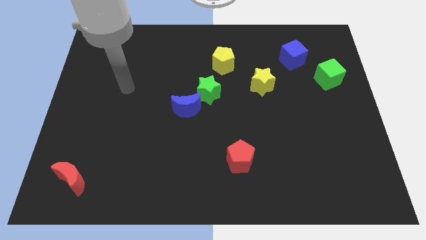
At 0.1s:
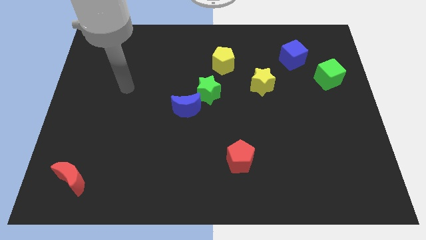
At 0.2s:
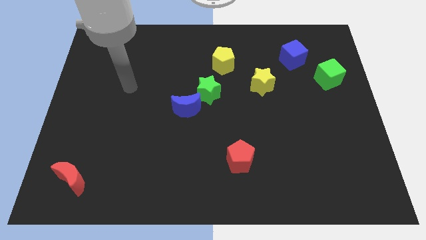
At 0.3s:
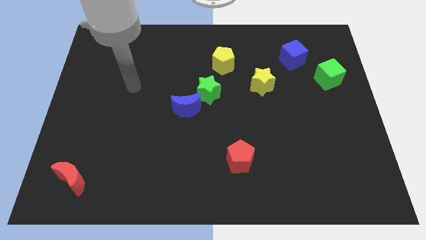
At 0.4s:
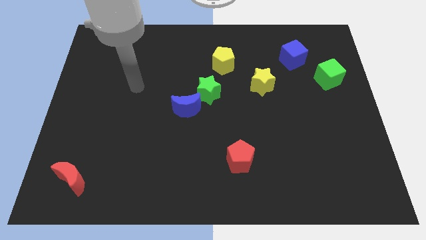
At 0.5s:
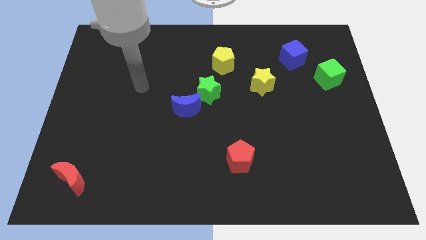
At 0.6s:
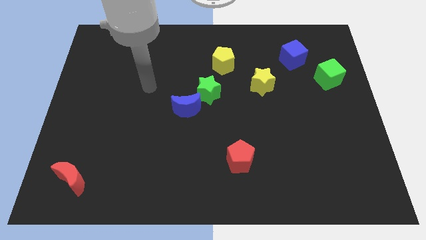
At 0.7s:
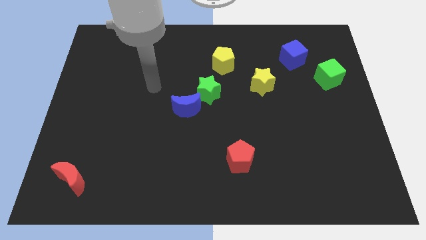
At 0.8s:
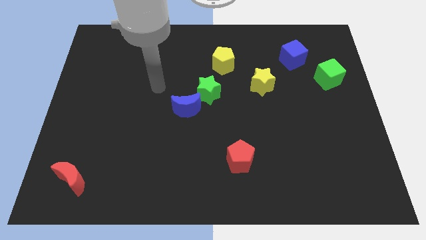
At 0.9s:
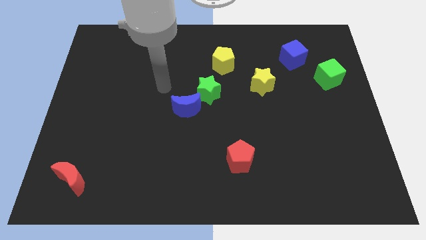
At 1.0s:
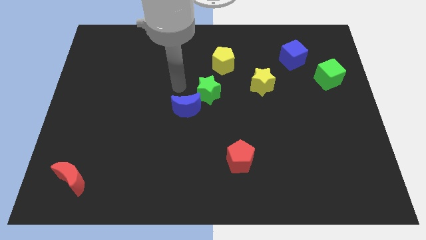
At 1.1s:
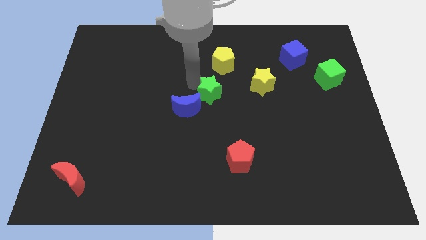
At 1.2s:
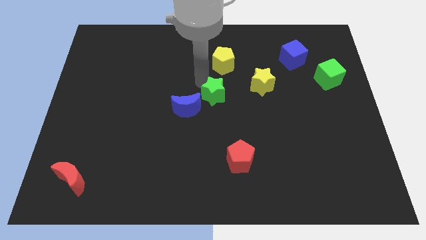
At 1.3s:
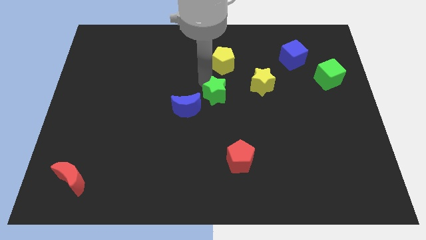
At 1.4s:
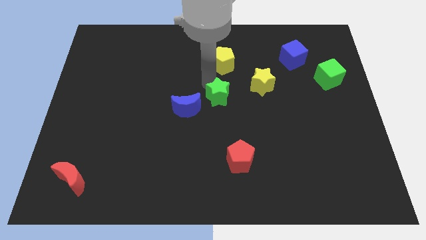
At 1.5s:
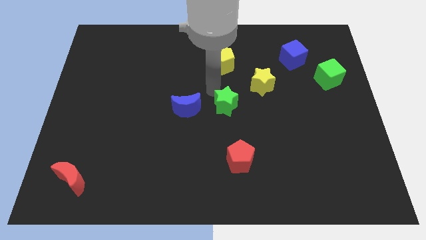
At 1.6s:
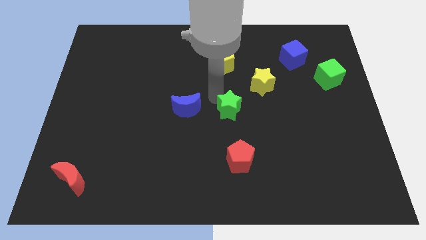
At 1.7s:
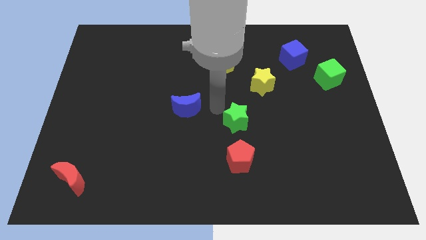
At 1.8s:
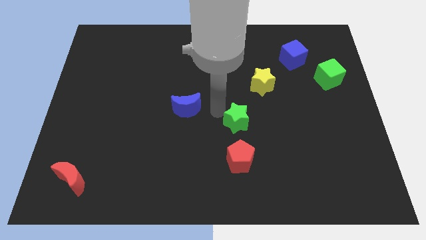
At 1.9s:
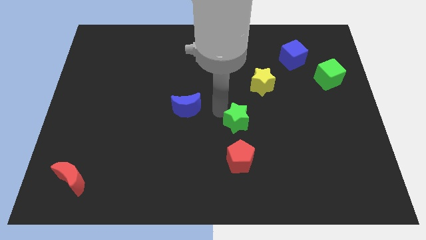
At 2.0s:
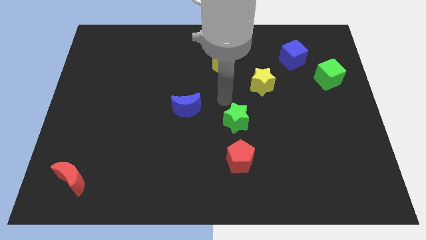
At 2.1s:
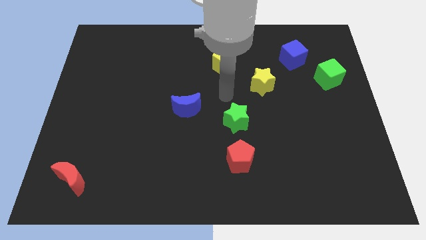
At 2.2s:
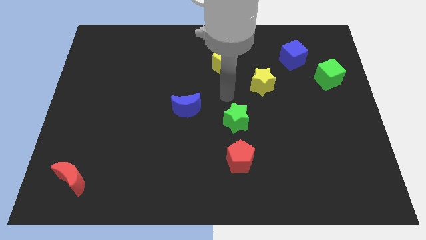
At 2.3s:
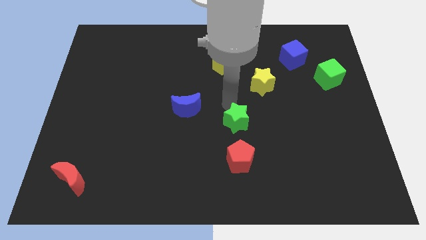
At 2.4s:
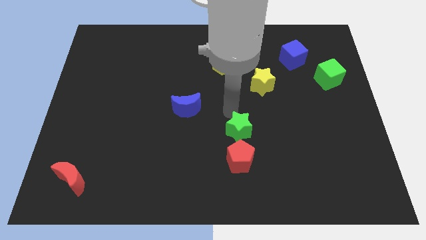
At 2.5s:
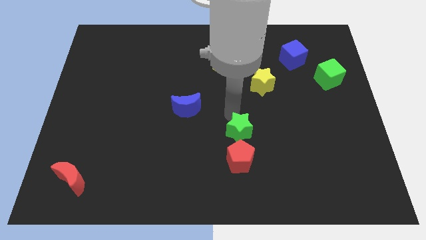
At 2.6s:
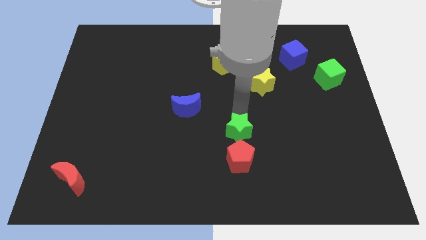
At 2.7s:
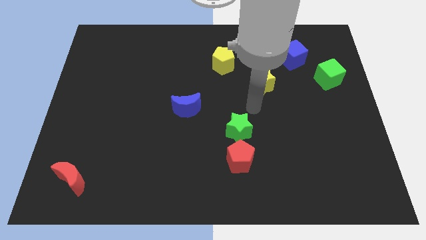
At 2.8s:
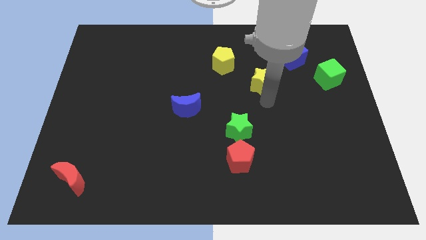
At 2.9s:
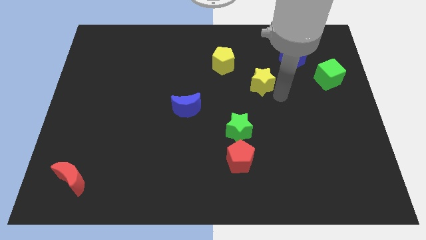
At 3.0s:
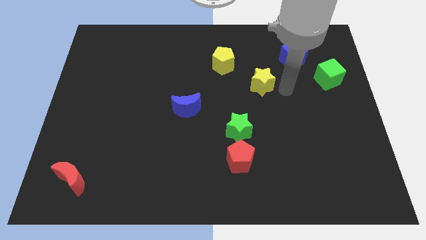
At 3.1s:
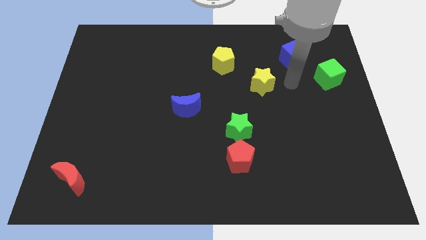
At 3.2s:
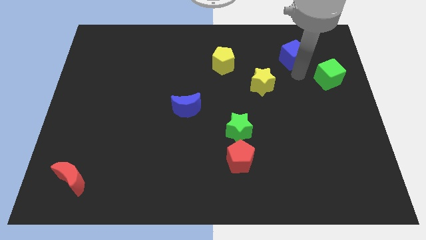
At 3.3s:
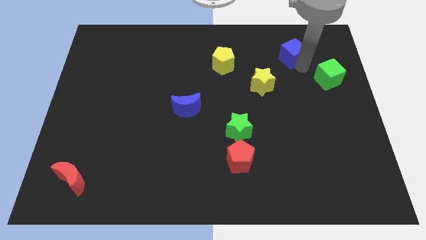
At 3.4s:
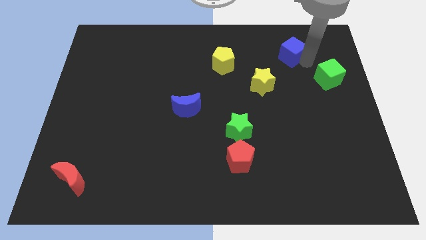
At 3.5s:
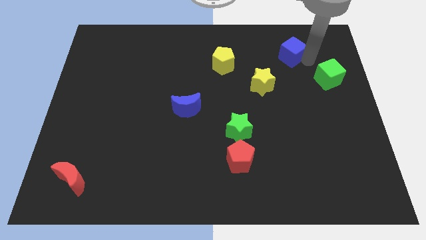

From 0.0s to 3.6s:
put the green star at the top of the red pentagon

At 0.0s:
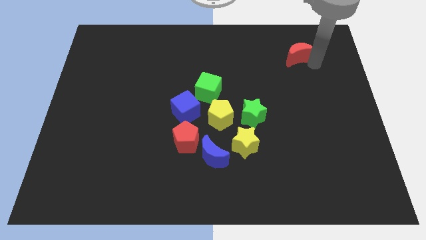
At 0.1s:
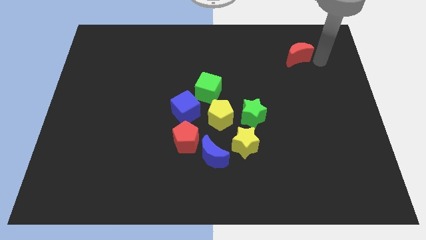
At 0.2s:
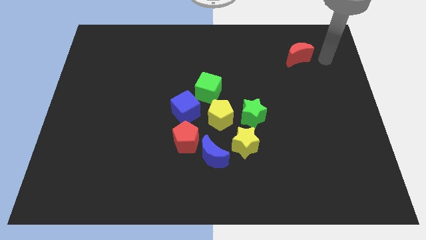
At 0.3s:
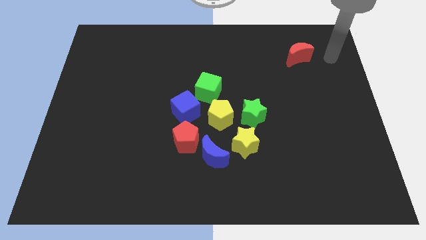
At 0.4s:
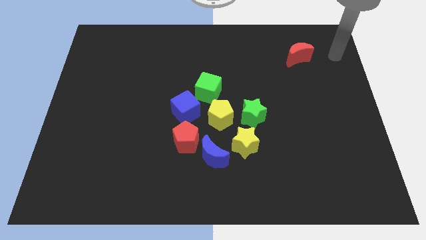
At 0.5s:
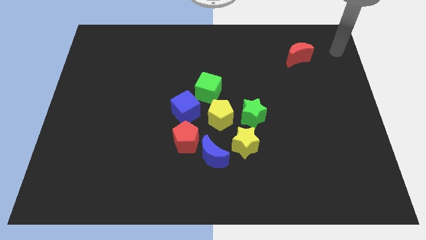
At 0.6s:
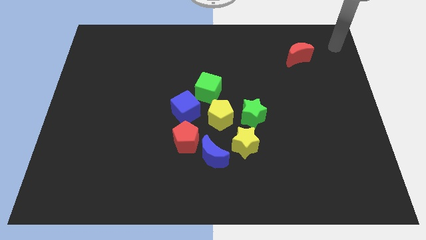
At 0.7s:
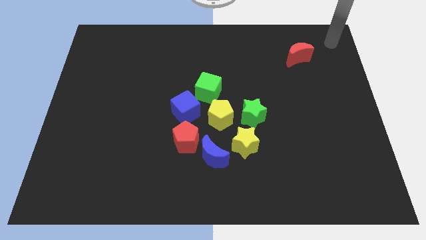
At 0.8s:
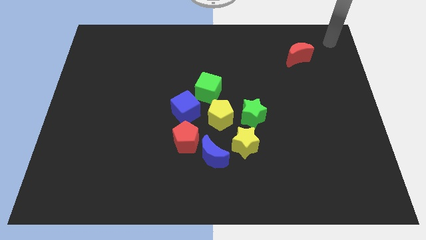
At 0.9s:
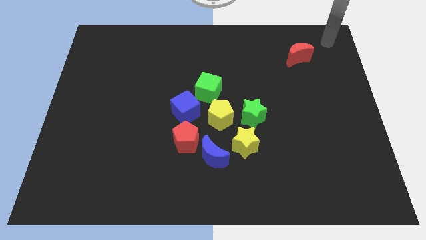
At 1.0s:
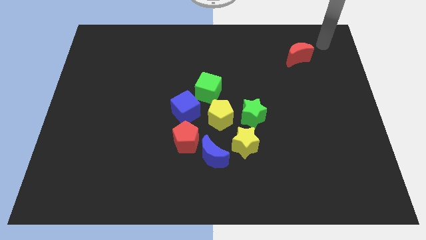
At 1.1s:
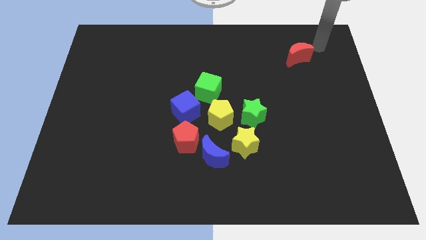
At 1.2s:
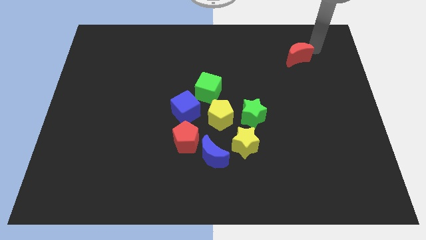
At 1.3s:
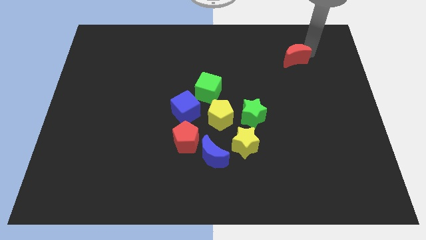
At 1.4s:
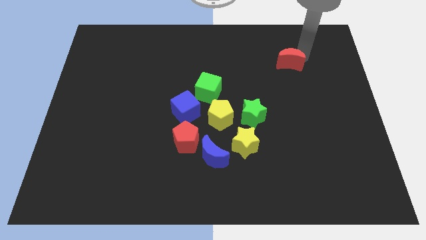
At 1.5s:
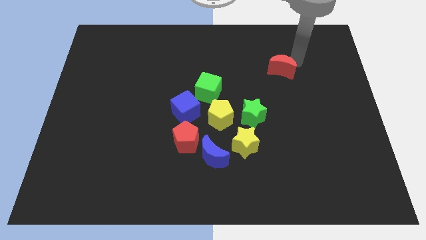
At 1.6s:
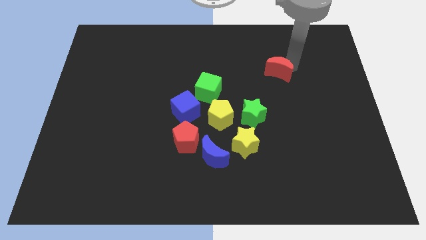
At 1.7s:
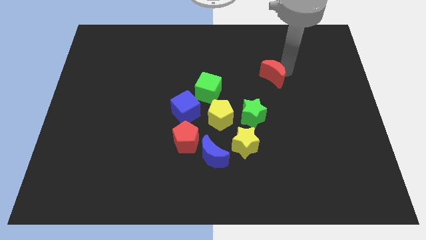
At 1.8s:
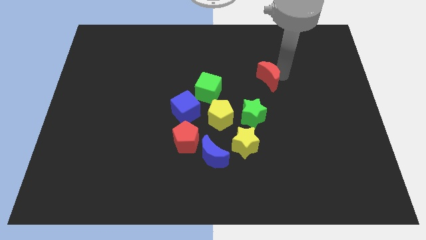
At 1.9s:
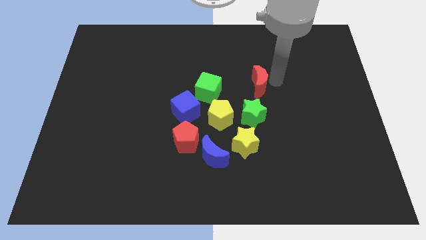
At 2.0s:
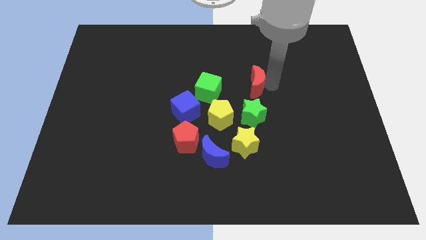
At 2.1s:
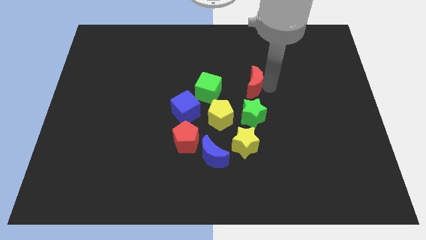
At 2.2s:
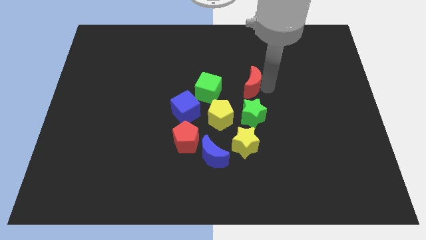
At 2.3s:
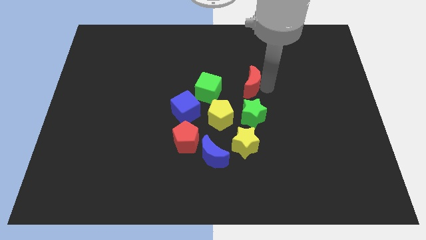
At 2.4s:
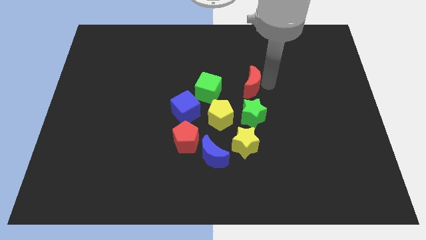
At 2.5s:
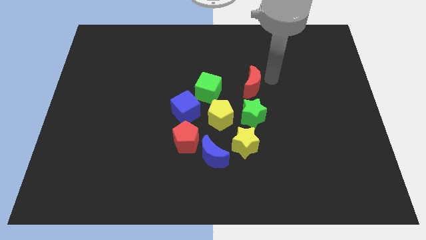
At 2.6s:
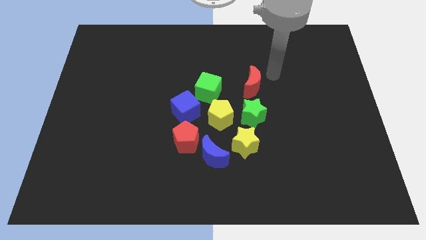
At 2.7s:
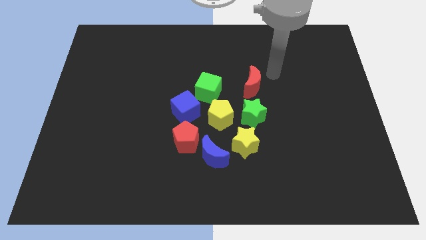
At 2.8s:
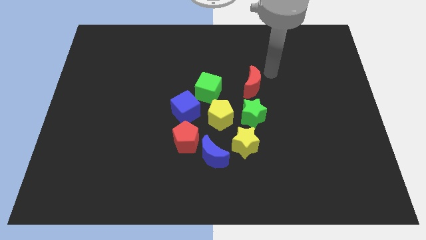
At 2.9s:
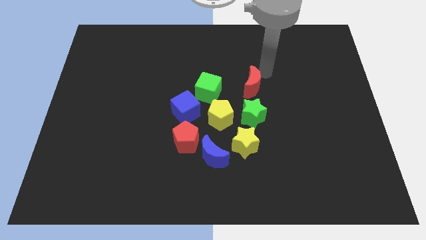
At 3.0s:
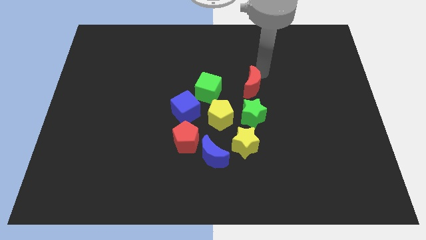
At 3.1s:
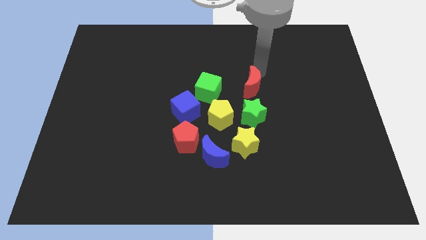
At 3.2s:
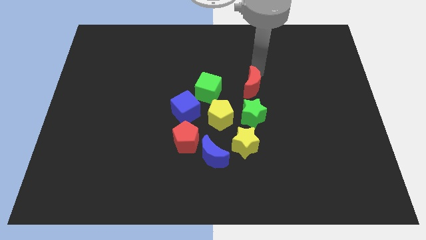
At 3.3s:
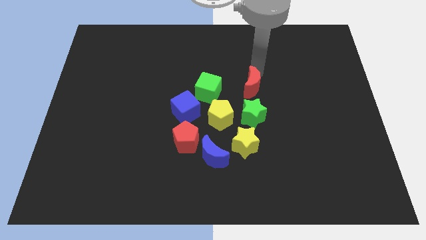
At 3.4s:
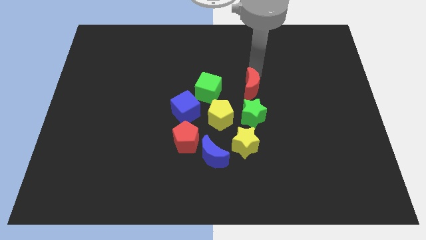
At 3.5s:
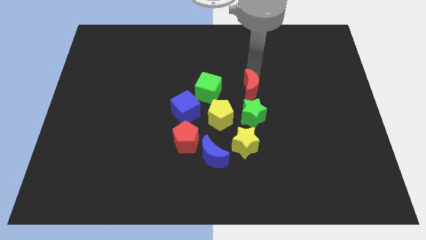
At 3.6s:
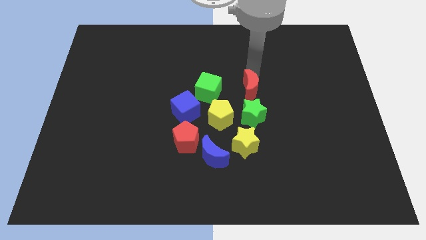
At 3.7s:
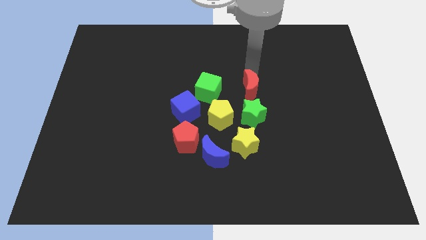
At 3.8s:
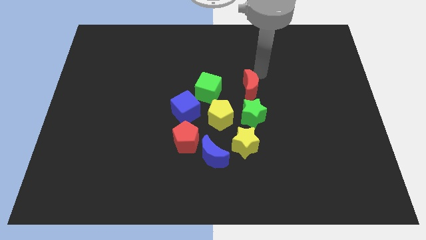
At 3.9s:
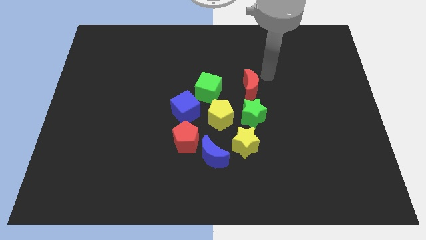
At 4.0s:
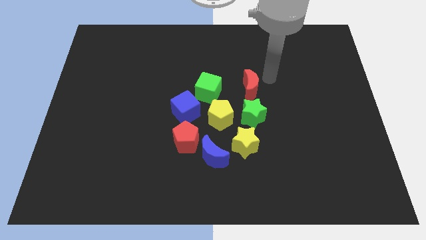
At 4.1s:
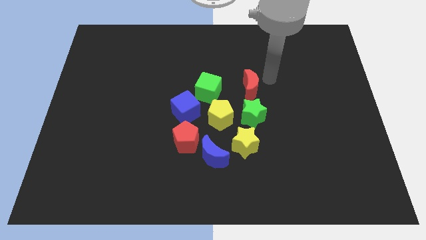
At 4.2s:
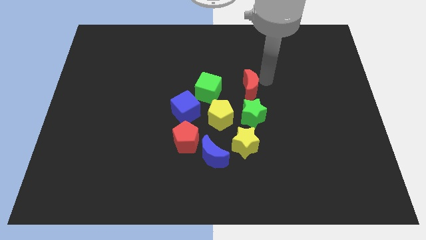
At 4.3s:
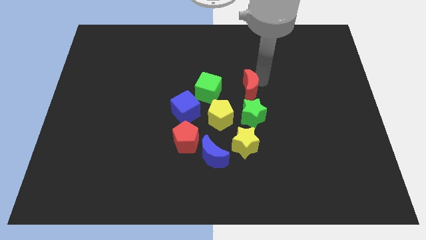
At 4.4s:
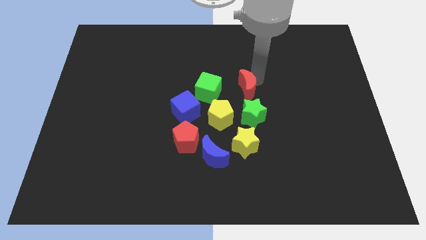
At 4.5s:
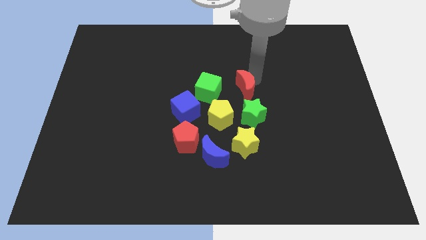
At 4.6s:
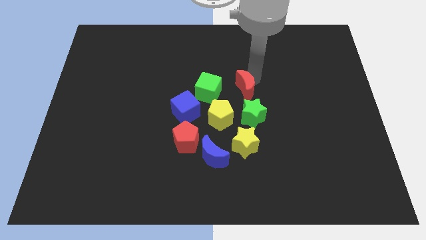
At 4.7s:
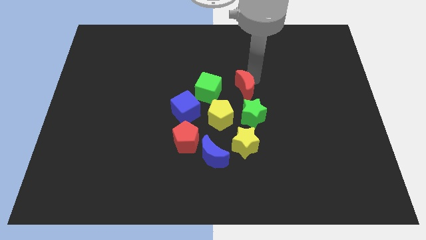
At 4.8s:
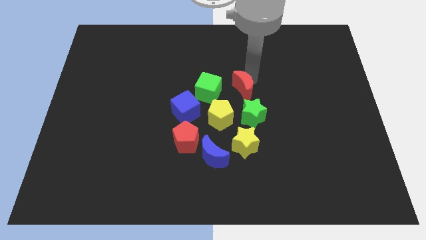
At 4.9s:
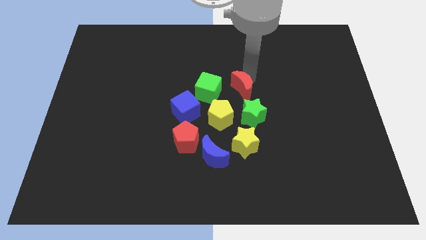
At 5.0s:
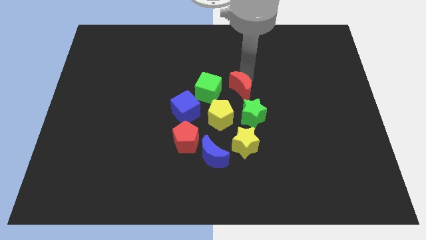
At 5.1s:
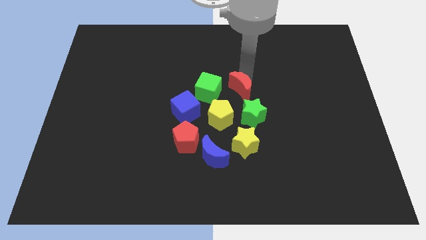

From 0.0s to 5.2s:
put the red moon into the group of blocks to form a circle
